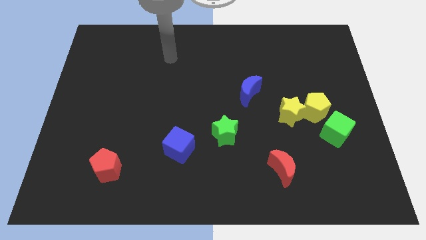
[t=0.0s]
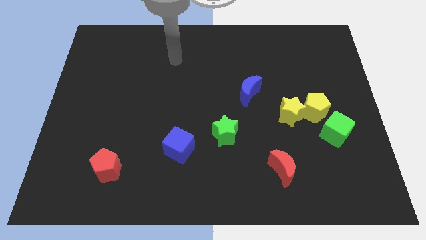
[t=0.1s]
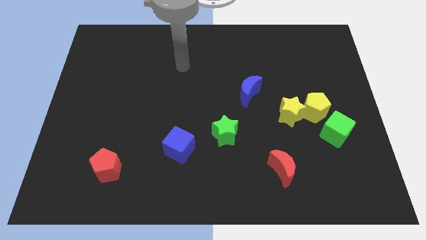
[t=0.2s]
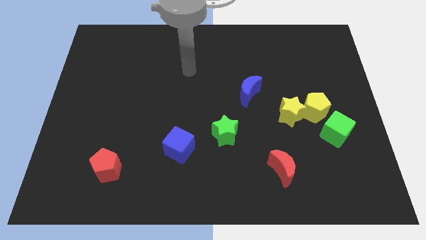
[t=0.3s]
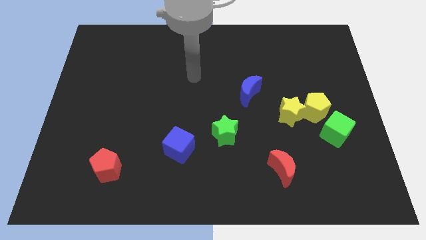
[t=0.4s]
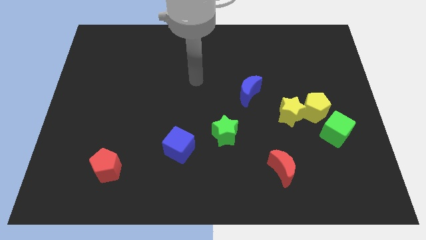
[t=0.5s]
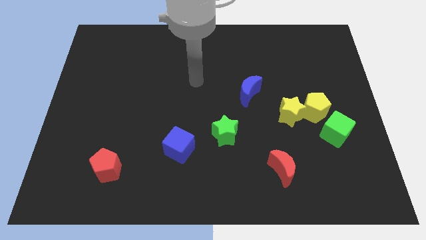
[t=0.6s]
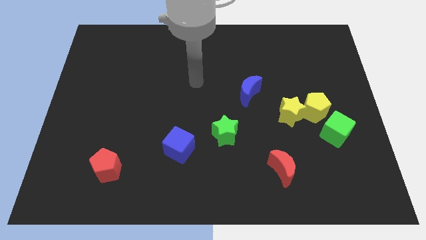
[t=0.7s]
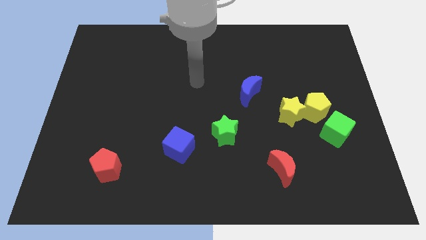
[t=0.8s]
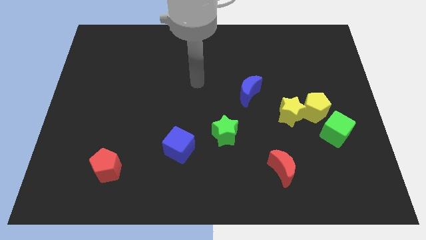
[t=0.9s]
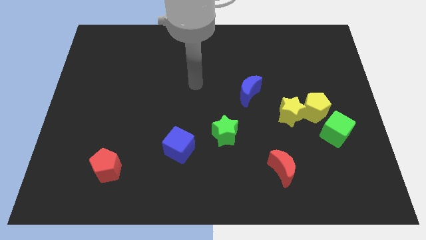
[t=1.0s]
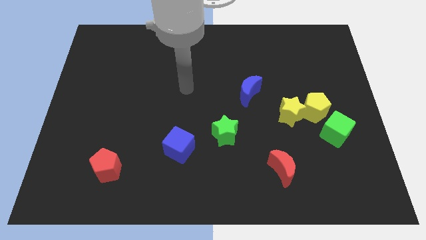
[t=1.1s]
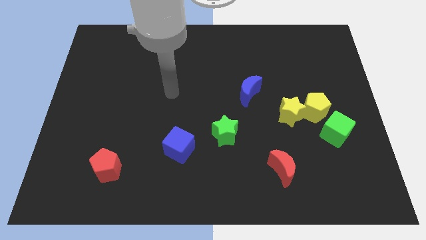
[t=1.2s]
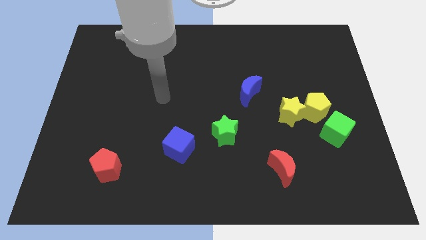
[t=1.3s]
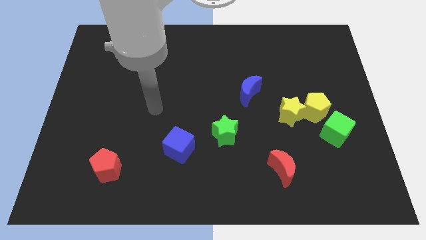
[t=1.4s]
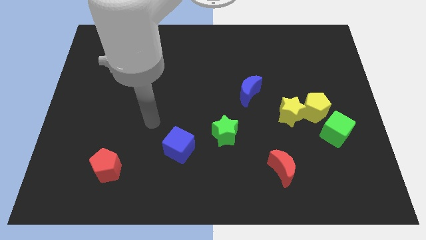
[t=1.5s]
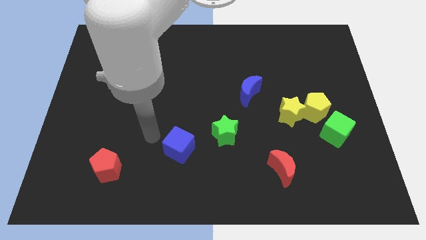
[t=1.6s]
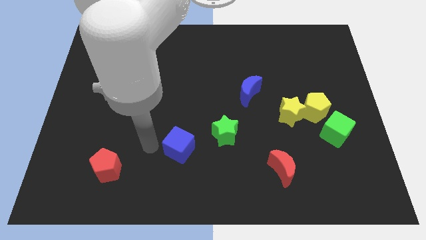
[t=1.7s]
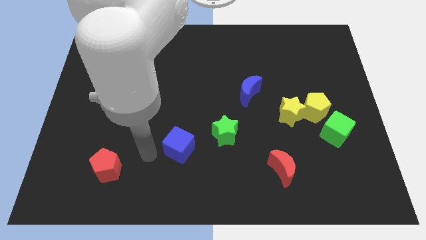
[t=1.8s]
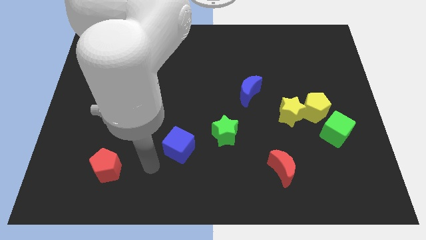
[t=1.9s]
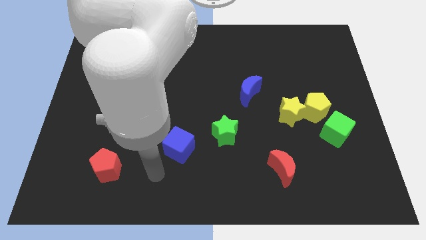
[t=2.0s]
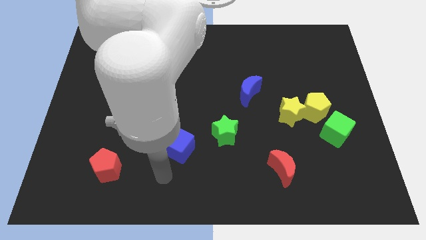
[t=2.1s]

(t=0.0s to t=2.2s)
move the arm towards the blue cube

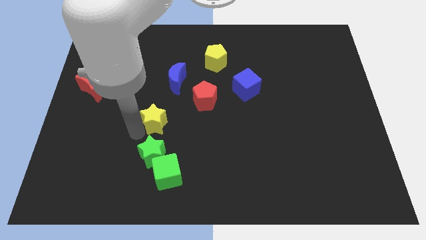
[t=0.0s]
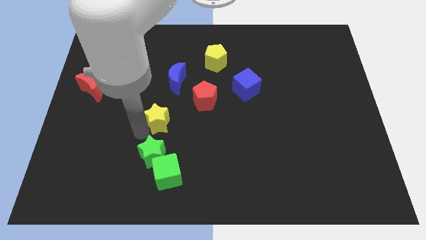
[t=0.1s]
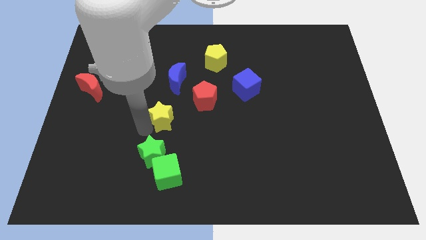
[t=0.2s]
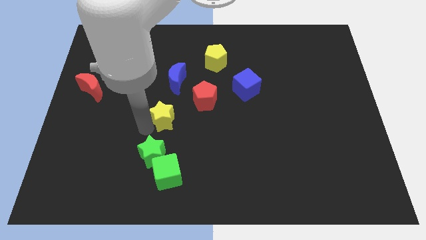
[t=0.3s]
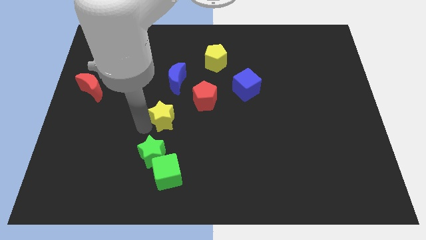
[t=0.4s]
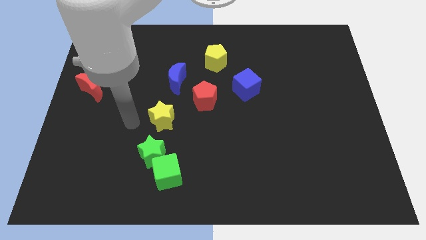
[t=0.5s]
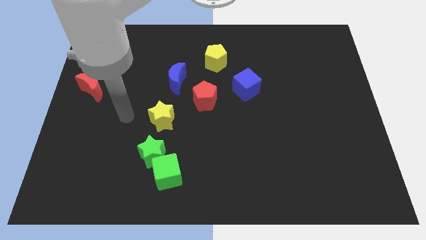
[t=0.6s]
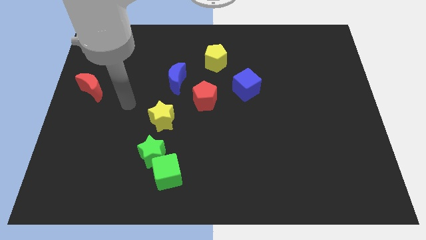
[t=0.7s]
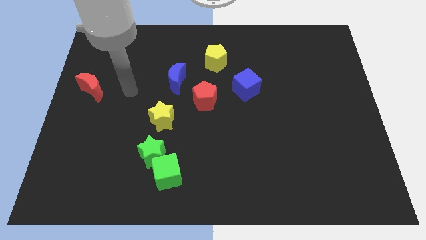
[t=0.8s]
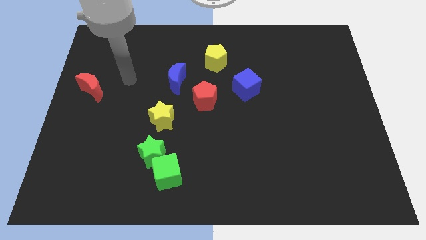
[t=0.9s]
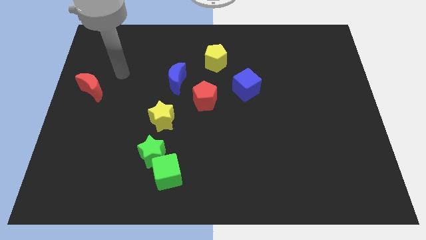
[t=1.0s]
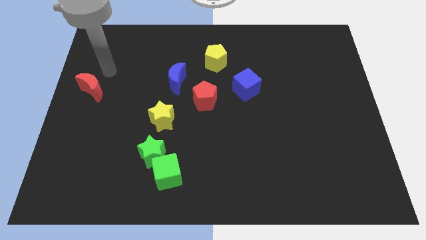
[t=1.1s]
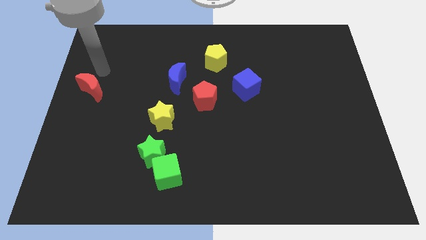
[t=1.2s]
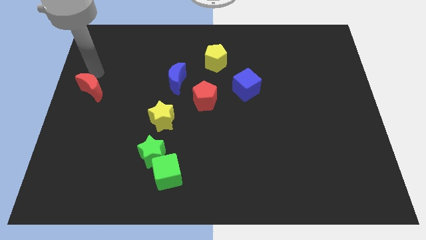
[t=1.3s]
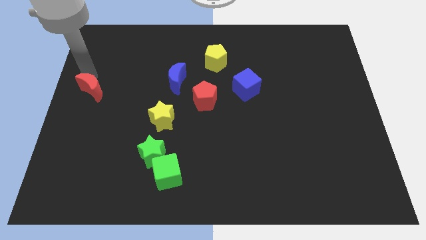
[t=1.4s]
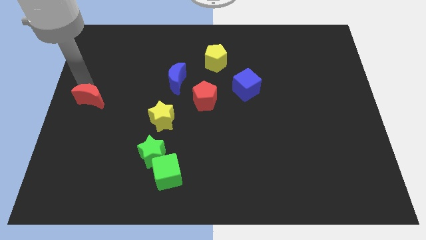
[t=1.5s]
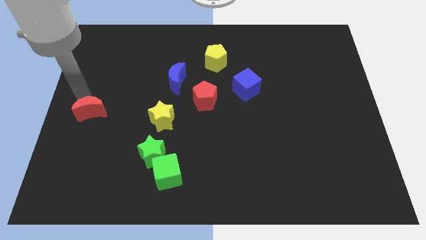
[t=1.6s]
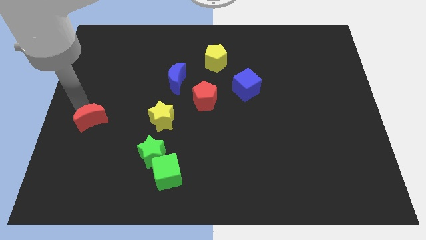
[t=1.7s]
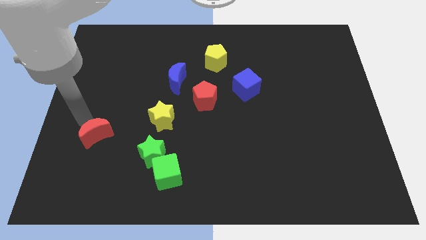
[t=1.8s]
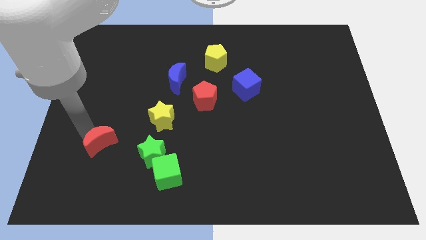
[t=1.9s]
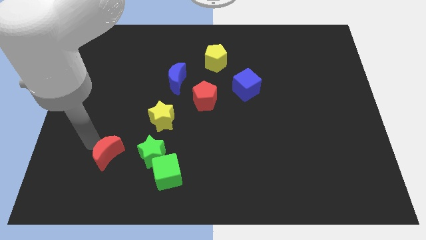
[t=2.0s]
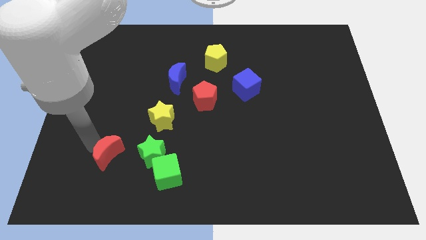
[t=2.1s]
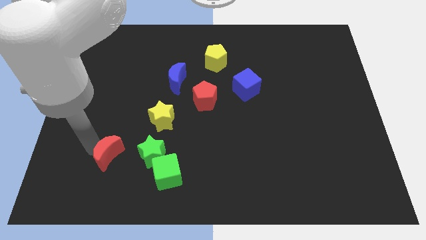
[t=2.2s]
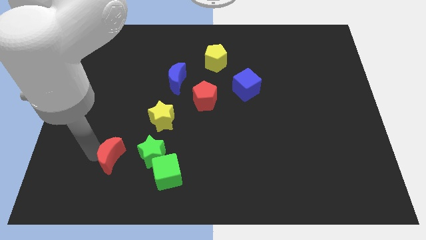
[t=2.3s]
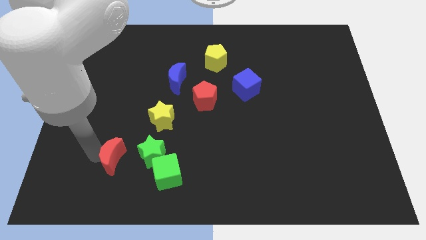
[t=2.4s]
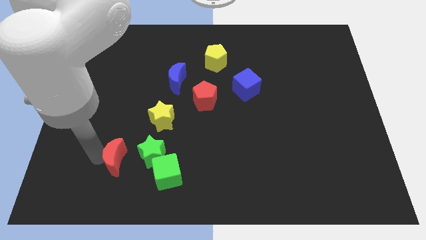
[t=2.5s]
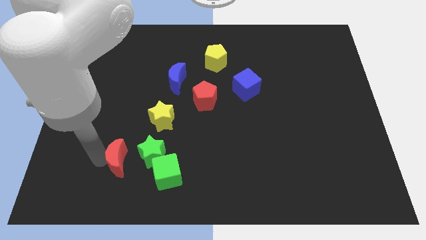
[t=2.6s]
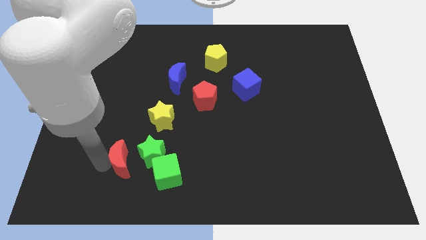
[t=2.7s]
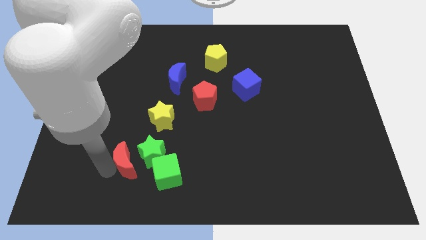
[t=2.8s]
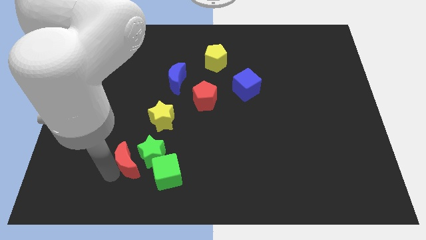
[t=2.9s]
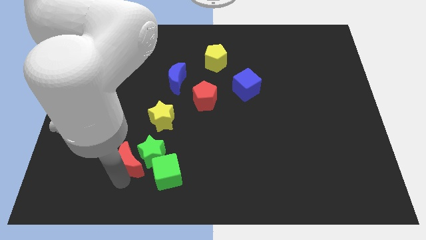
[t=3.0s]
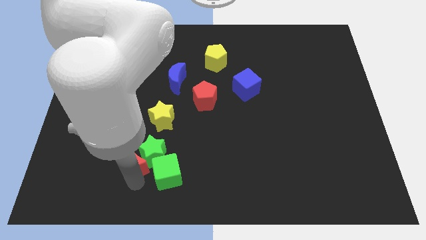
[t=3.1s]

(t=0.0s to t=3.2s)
push red crescent into the green star

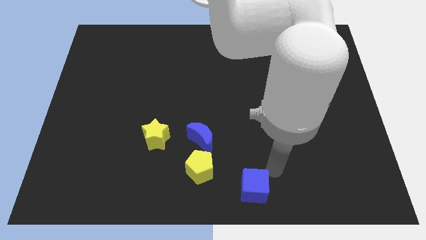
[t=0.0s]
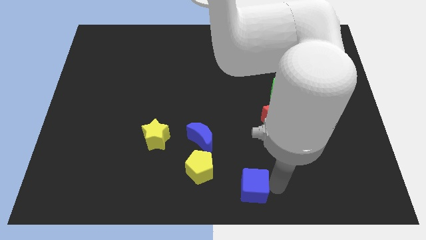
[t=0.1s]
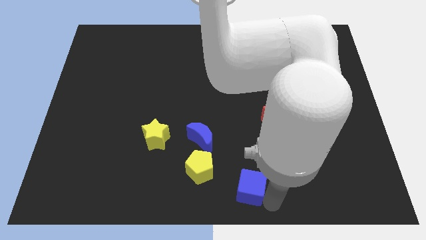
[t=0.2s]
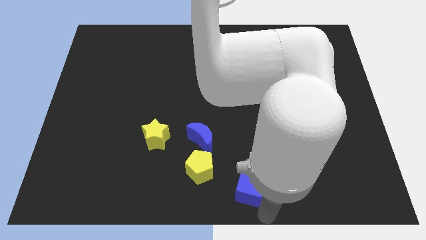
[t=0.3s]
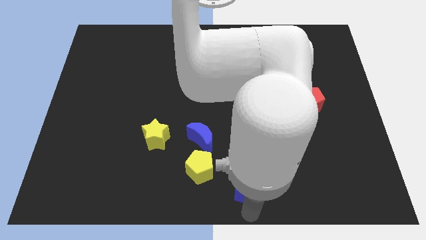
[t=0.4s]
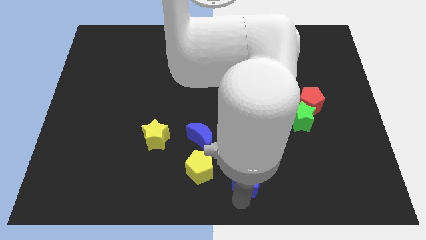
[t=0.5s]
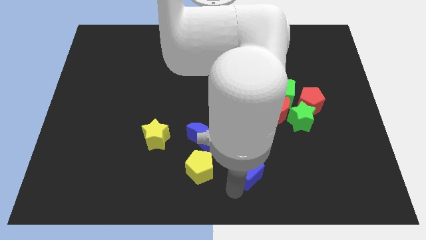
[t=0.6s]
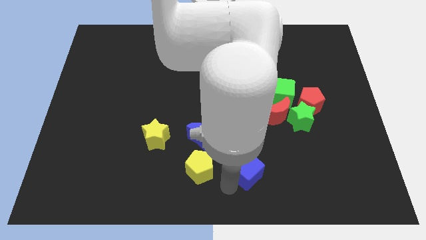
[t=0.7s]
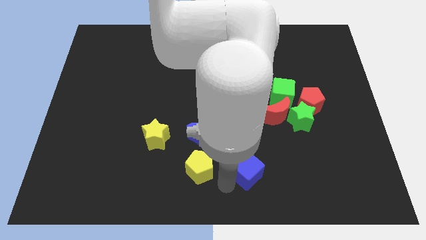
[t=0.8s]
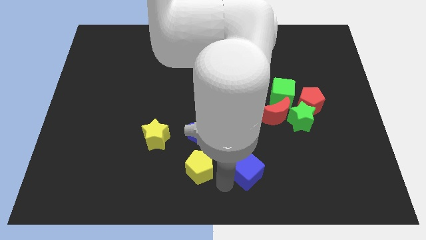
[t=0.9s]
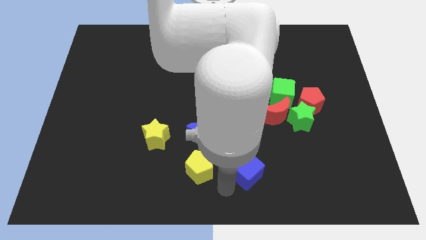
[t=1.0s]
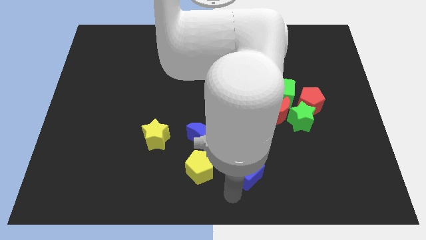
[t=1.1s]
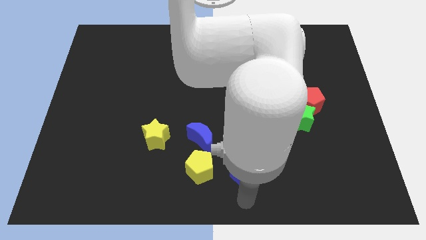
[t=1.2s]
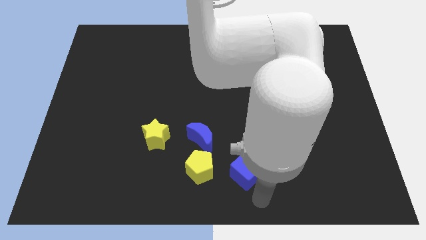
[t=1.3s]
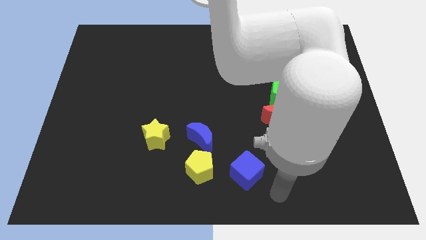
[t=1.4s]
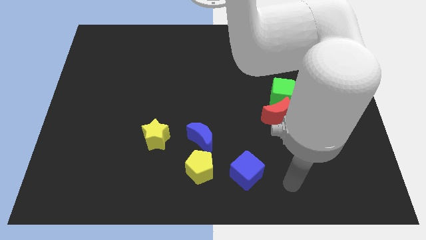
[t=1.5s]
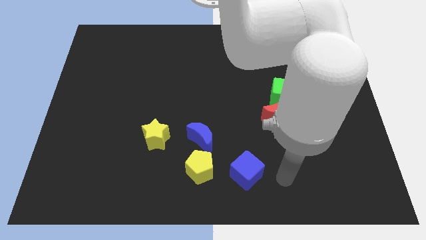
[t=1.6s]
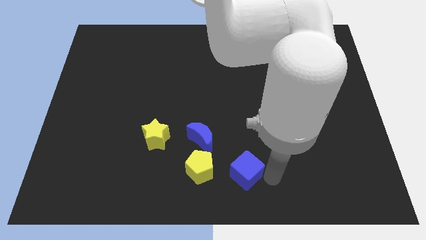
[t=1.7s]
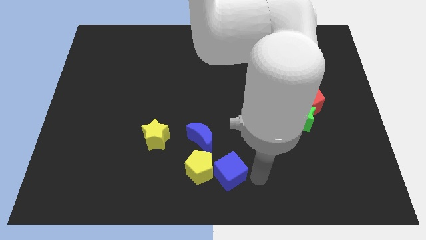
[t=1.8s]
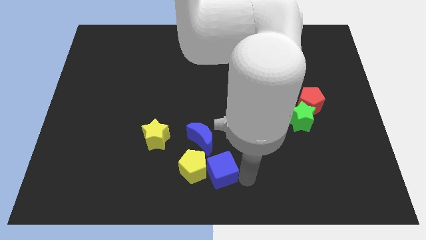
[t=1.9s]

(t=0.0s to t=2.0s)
push the blue cube into the yellow pentagon

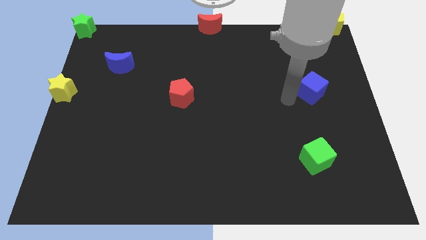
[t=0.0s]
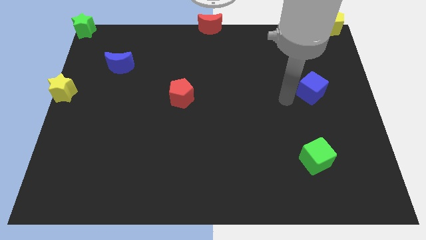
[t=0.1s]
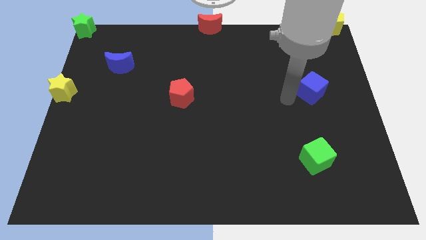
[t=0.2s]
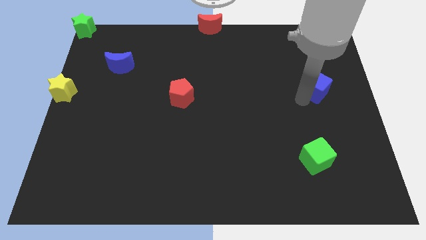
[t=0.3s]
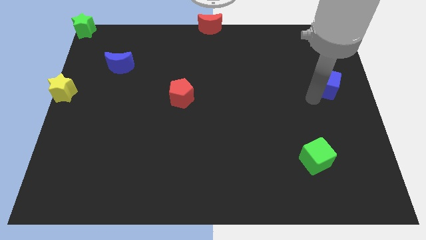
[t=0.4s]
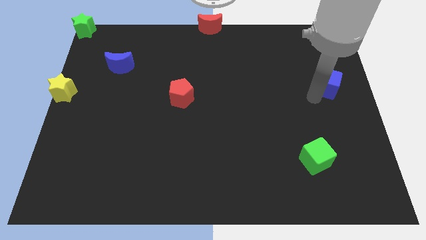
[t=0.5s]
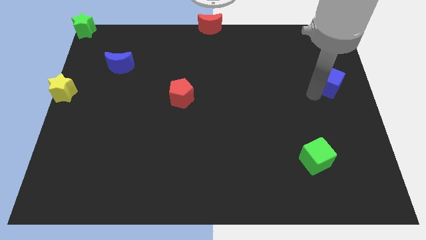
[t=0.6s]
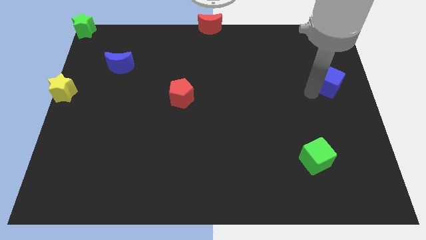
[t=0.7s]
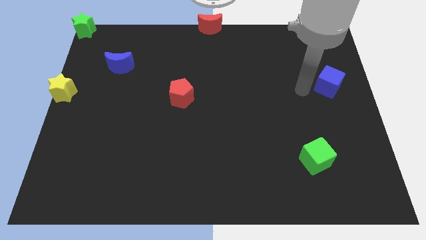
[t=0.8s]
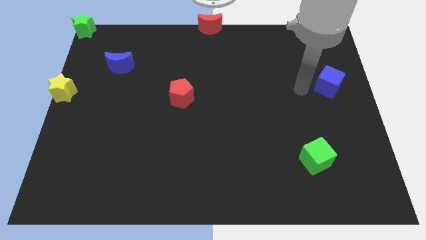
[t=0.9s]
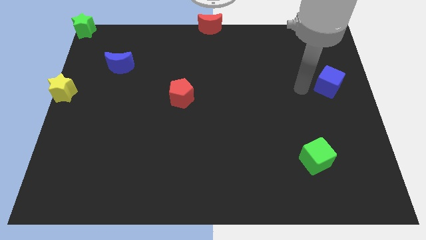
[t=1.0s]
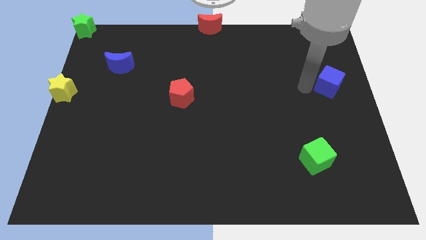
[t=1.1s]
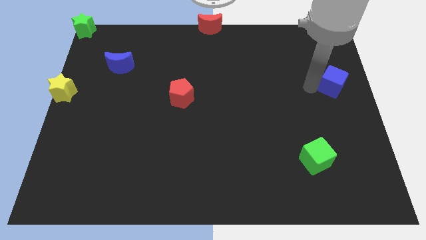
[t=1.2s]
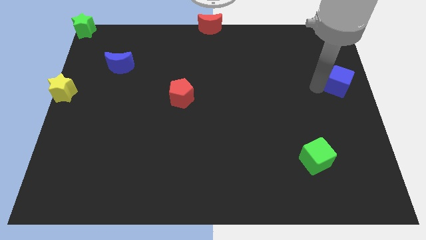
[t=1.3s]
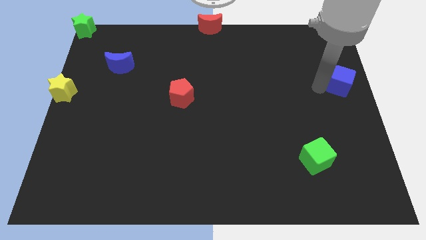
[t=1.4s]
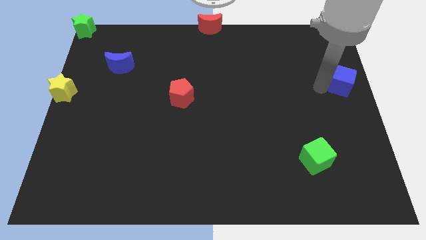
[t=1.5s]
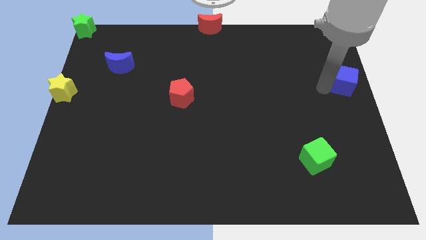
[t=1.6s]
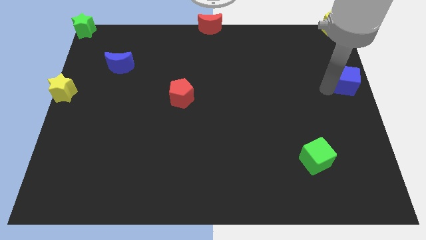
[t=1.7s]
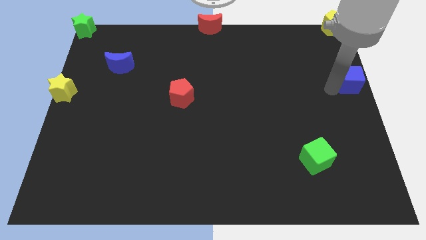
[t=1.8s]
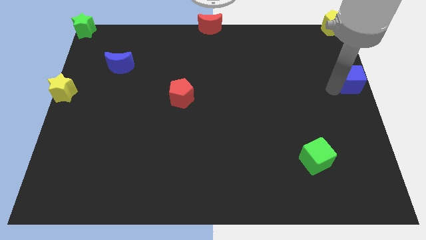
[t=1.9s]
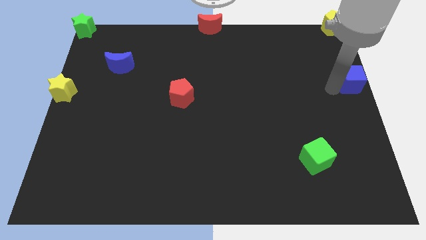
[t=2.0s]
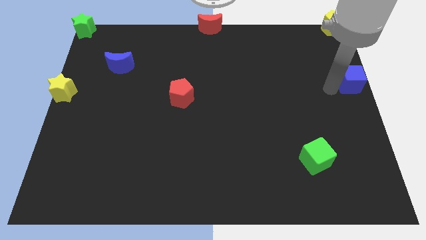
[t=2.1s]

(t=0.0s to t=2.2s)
move the blue cube to the center right of the board
